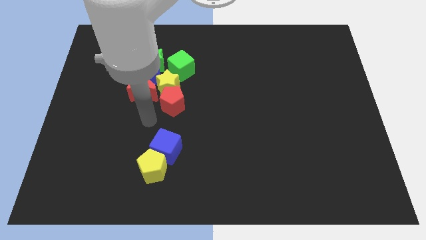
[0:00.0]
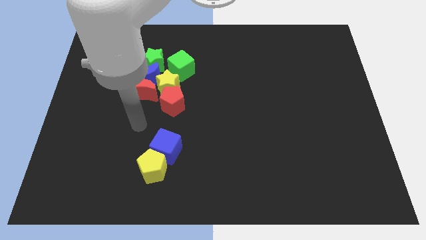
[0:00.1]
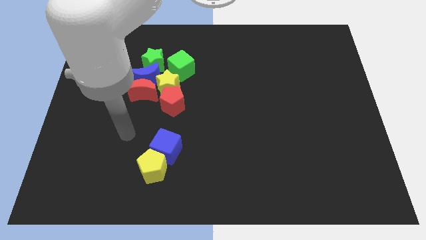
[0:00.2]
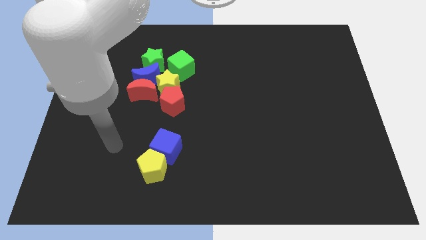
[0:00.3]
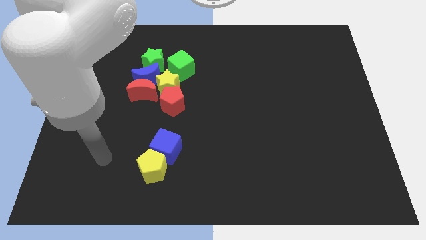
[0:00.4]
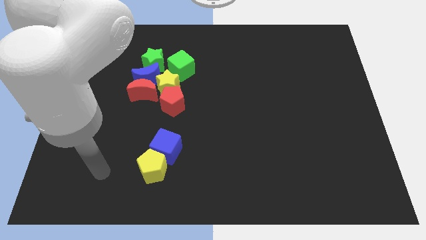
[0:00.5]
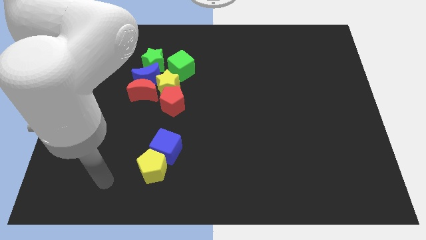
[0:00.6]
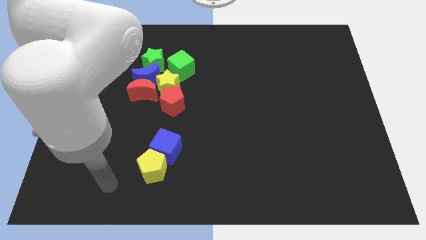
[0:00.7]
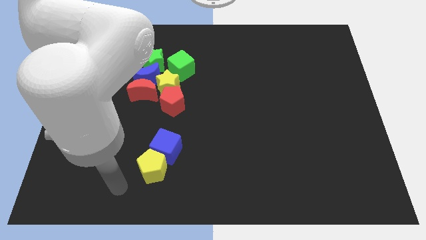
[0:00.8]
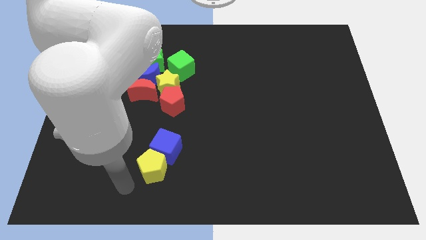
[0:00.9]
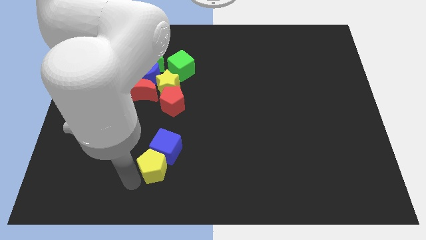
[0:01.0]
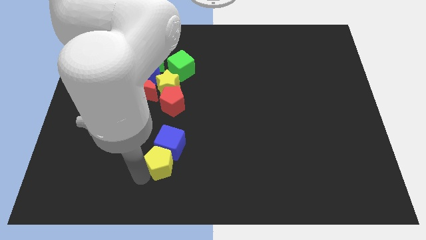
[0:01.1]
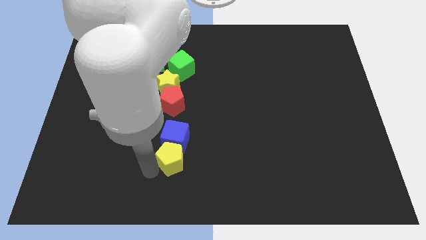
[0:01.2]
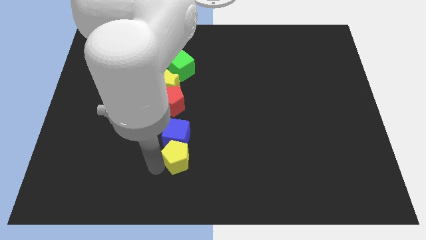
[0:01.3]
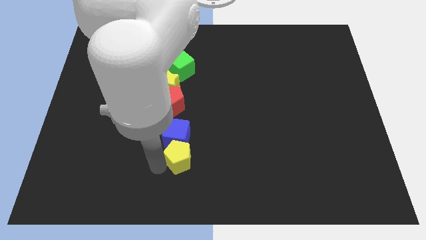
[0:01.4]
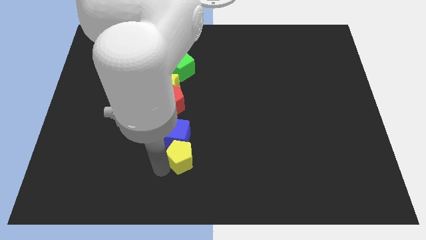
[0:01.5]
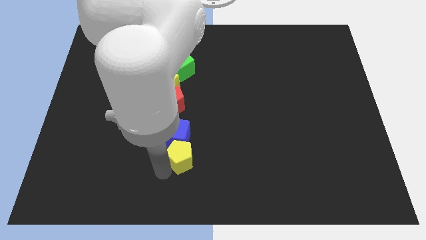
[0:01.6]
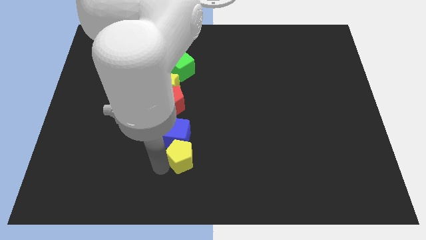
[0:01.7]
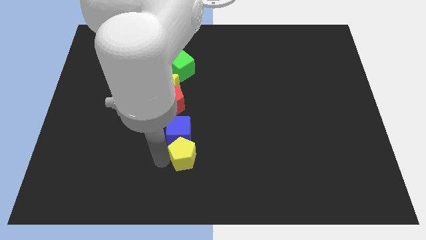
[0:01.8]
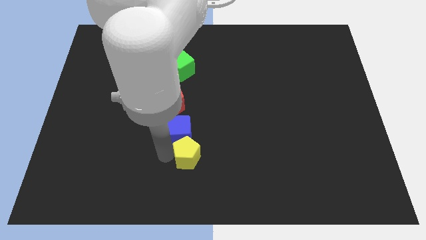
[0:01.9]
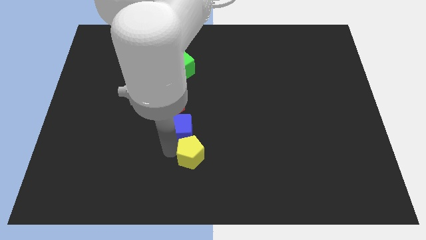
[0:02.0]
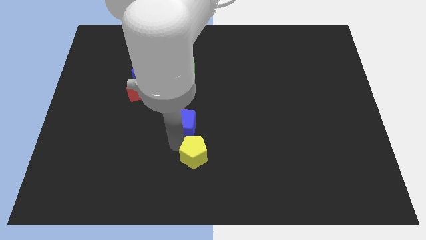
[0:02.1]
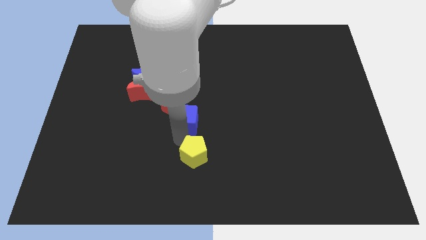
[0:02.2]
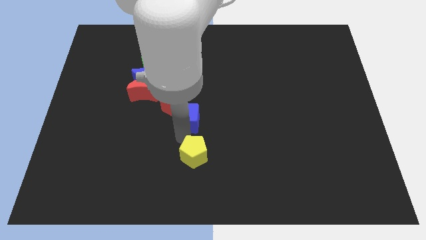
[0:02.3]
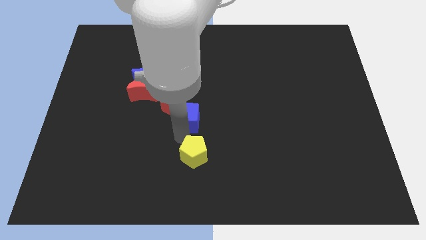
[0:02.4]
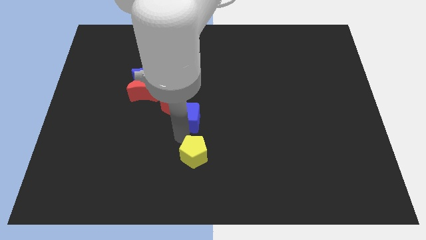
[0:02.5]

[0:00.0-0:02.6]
move your arm away from the red pentagon

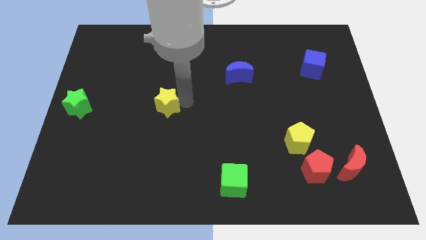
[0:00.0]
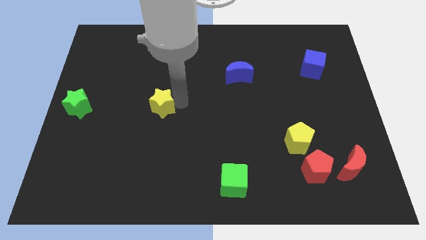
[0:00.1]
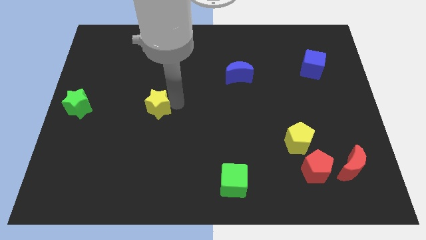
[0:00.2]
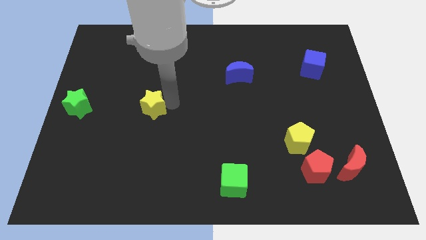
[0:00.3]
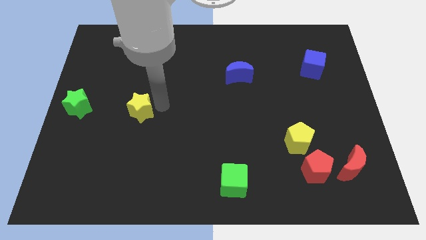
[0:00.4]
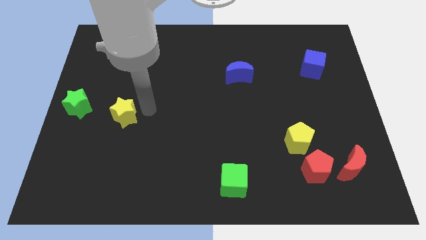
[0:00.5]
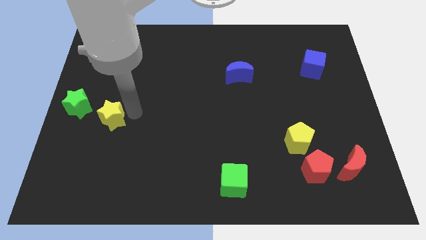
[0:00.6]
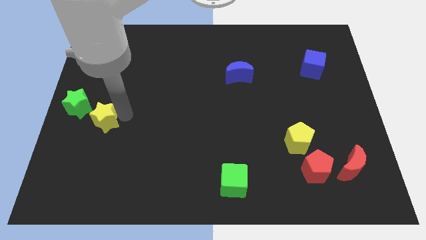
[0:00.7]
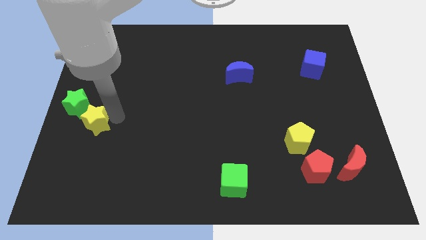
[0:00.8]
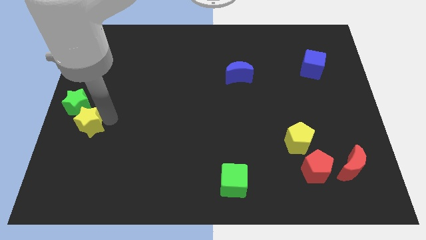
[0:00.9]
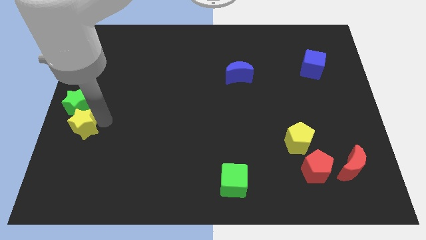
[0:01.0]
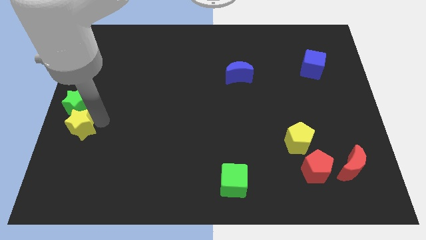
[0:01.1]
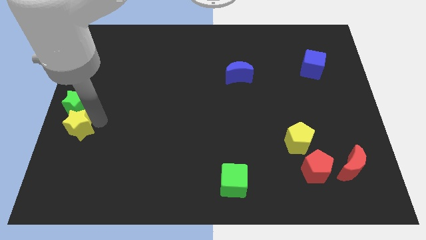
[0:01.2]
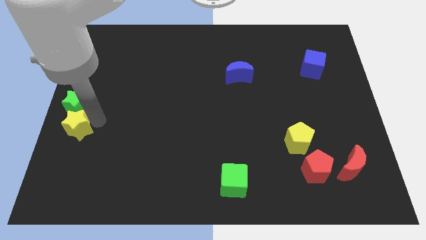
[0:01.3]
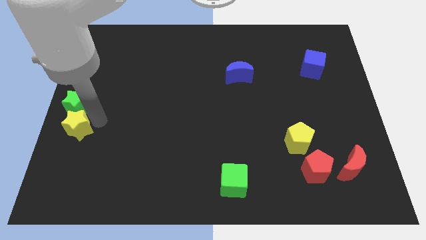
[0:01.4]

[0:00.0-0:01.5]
place yellow star to the bottom of green star

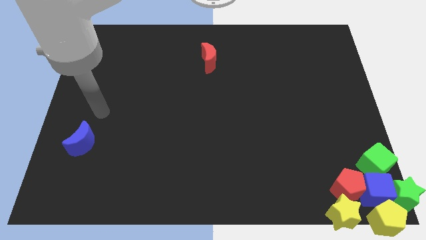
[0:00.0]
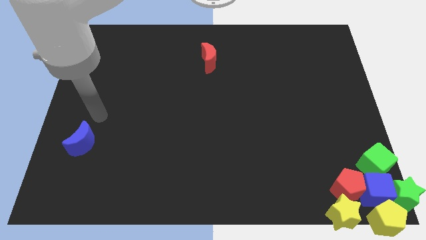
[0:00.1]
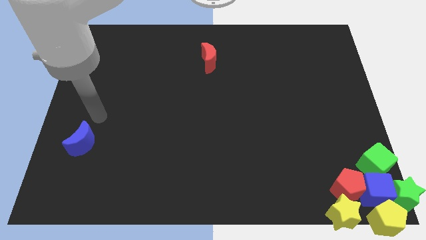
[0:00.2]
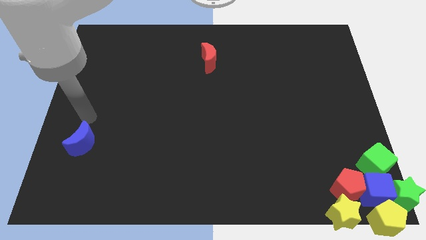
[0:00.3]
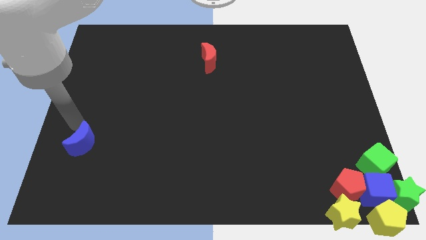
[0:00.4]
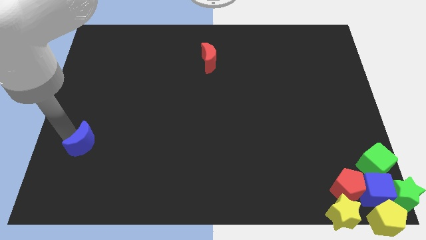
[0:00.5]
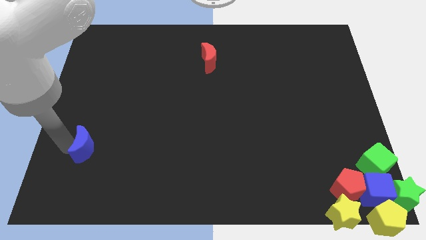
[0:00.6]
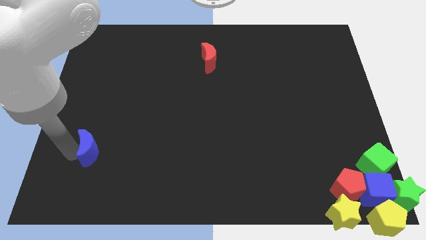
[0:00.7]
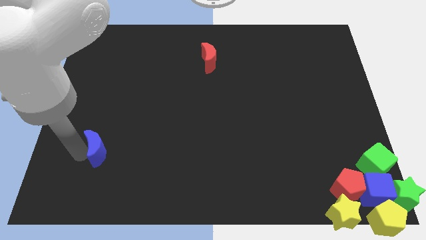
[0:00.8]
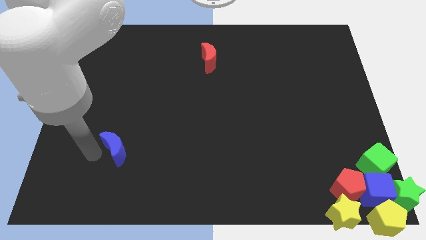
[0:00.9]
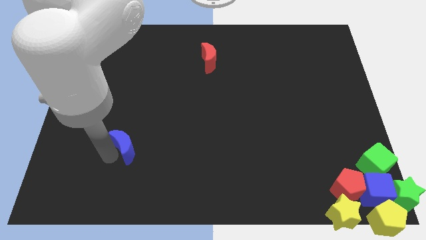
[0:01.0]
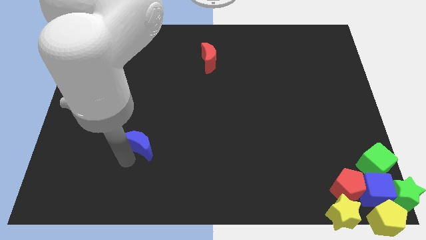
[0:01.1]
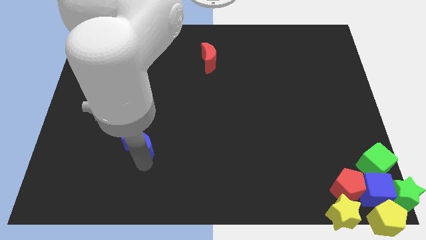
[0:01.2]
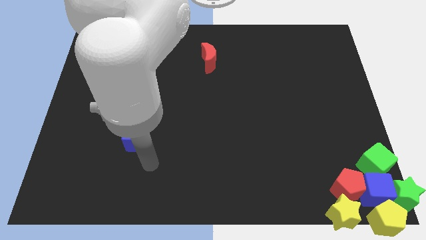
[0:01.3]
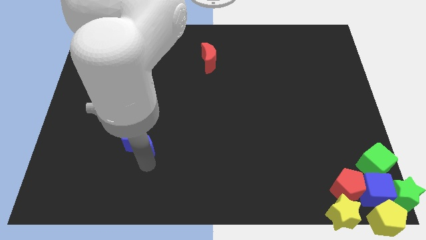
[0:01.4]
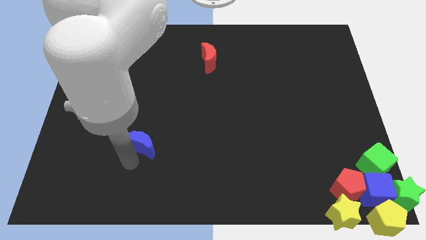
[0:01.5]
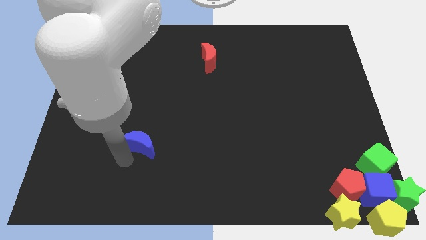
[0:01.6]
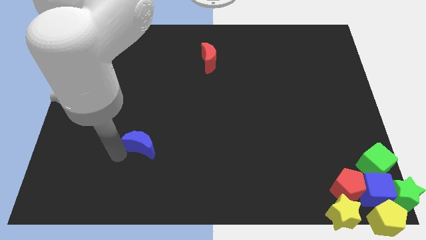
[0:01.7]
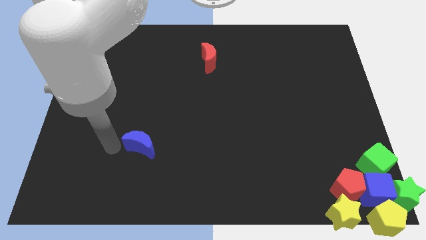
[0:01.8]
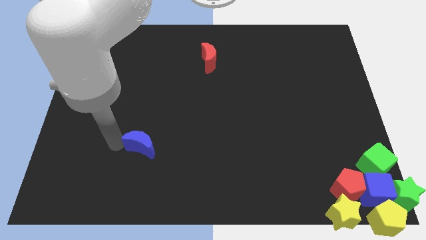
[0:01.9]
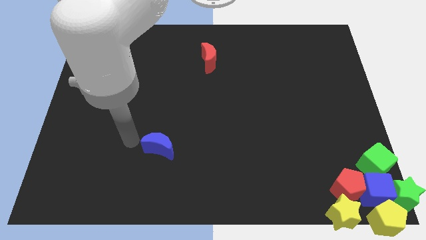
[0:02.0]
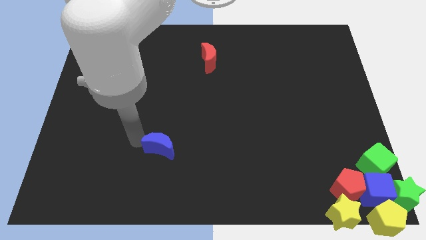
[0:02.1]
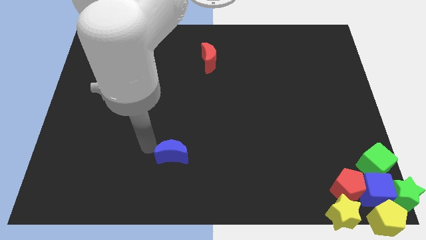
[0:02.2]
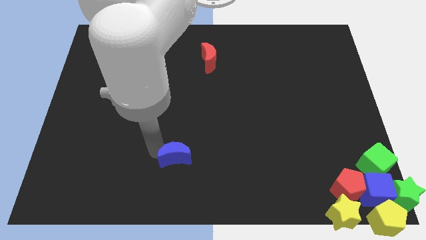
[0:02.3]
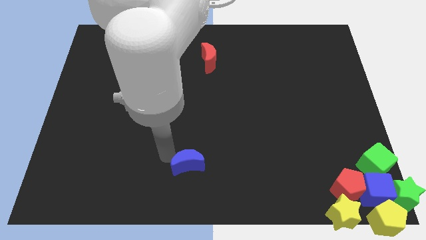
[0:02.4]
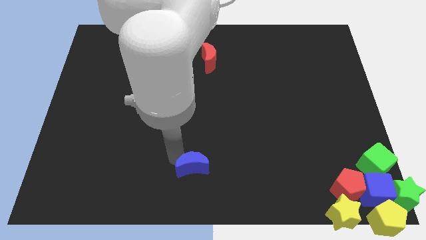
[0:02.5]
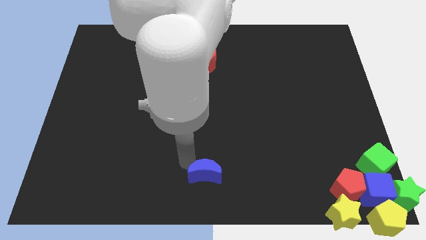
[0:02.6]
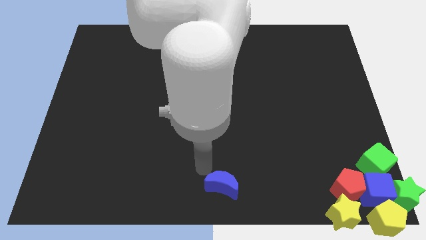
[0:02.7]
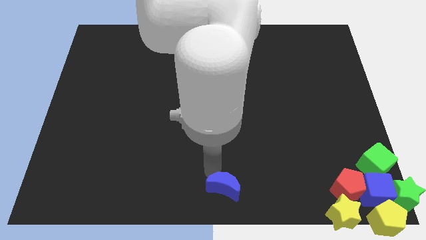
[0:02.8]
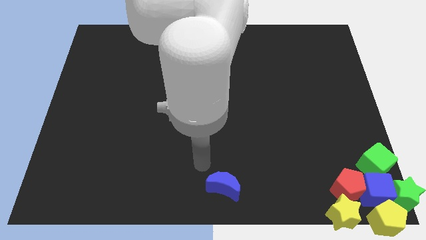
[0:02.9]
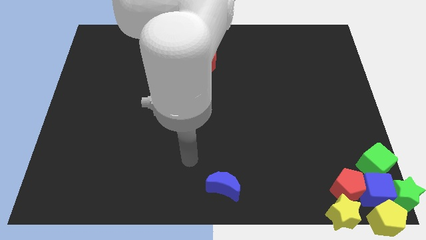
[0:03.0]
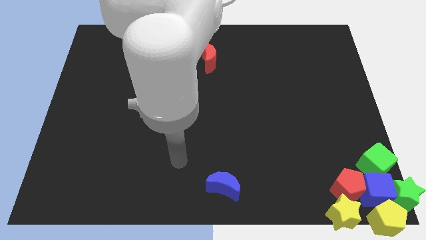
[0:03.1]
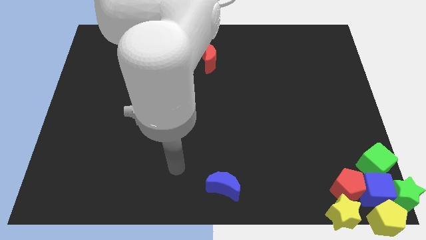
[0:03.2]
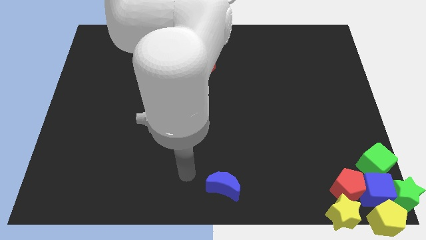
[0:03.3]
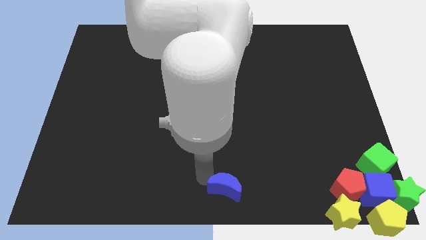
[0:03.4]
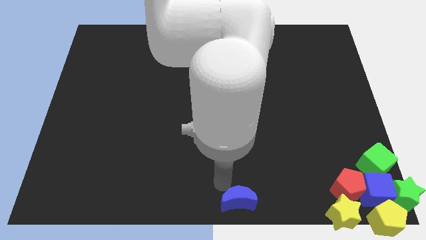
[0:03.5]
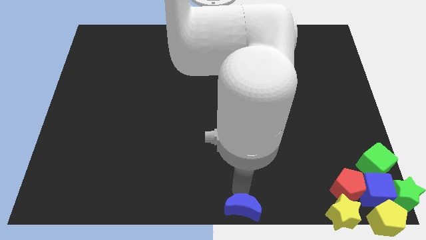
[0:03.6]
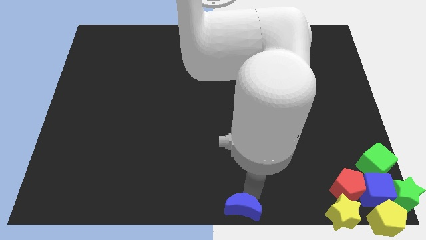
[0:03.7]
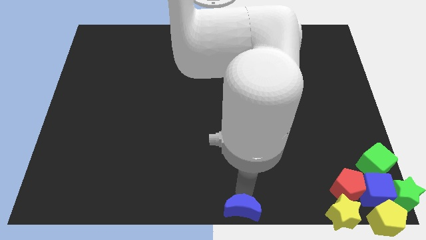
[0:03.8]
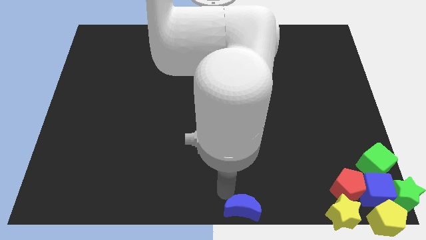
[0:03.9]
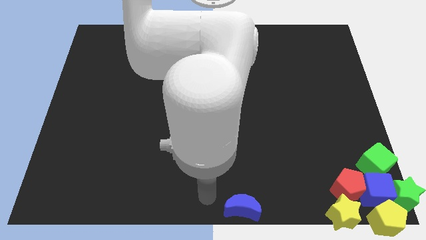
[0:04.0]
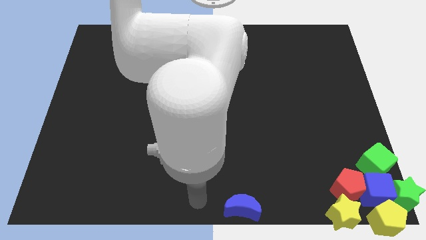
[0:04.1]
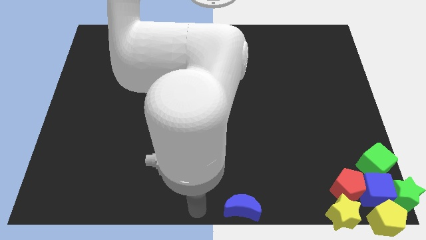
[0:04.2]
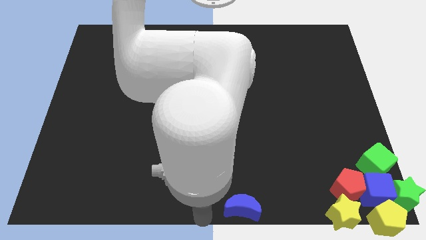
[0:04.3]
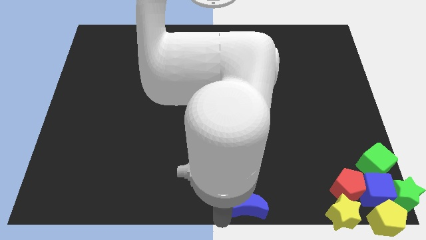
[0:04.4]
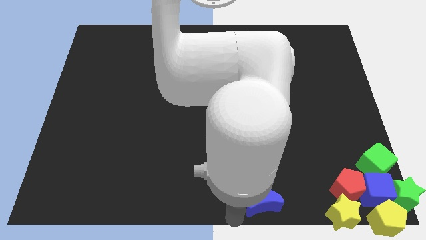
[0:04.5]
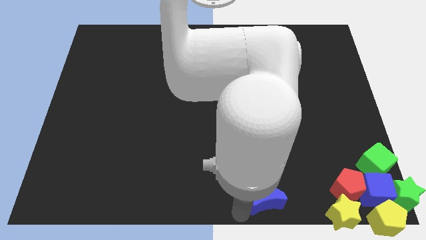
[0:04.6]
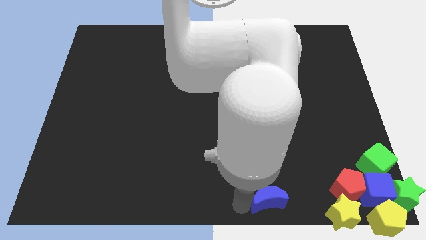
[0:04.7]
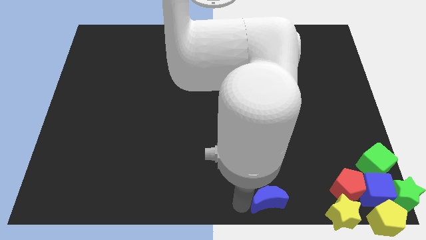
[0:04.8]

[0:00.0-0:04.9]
place the blue cube close to group of blocks at the bottom right corner
